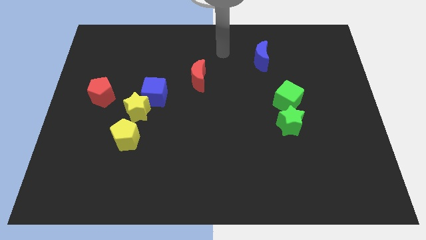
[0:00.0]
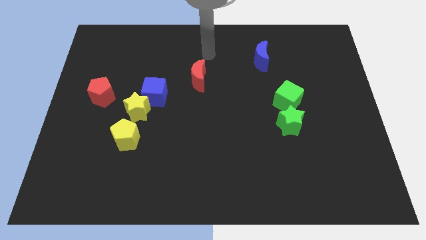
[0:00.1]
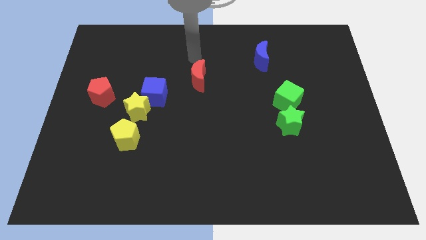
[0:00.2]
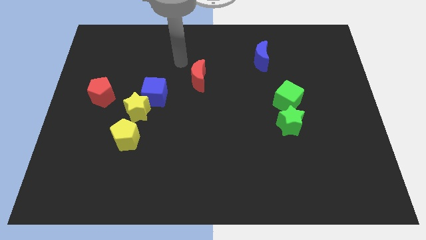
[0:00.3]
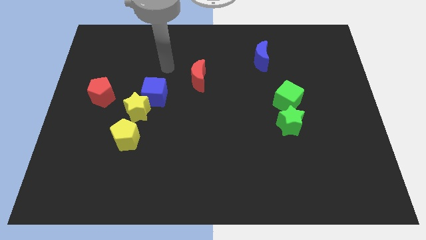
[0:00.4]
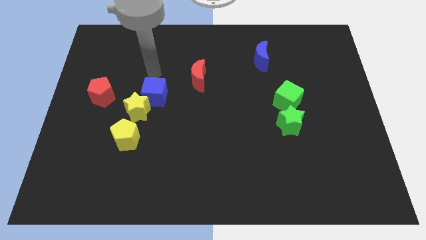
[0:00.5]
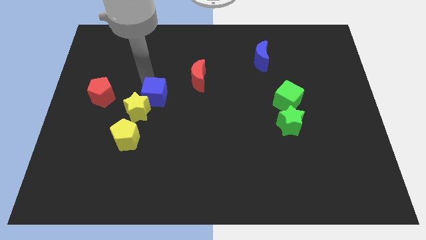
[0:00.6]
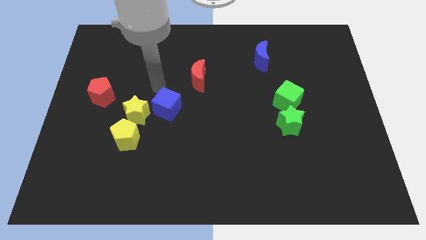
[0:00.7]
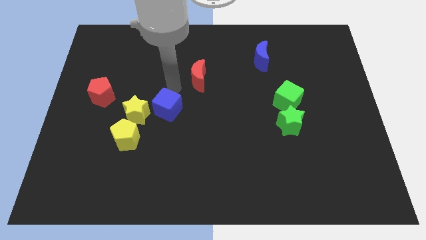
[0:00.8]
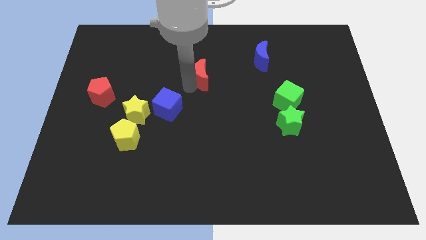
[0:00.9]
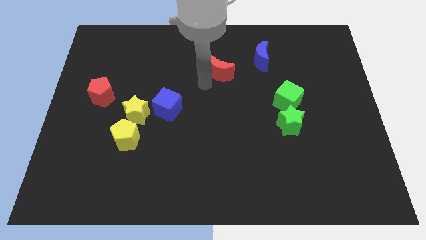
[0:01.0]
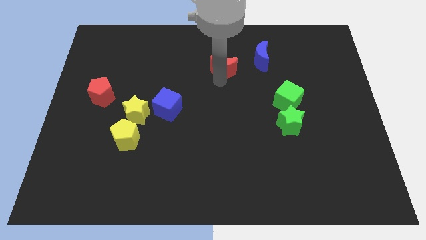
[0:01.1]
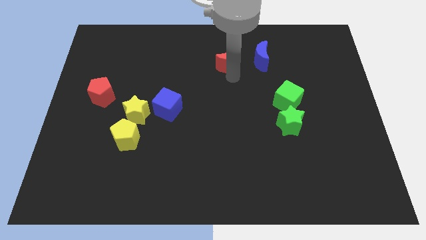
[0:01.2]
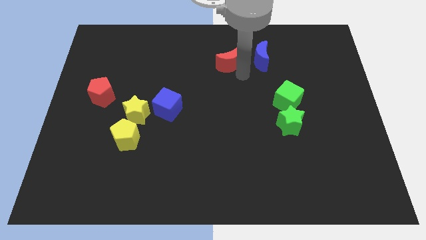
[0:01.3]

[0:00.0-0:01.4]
move the red crescent towards blue crescent

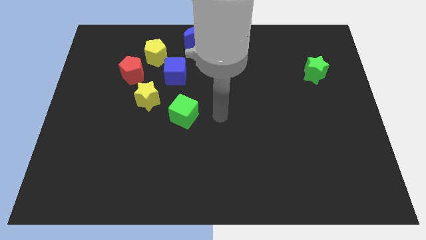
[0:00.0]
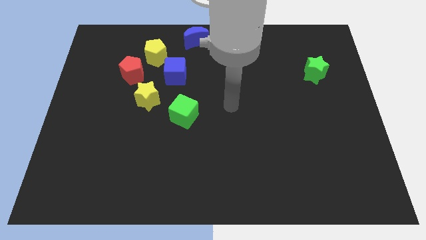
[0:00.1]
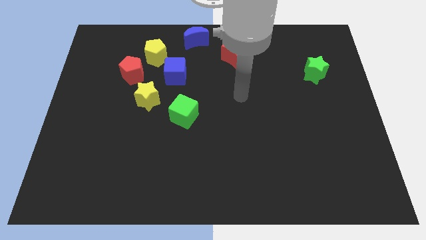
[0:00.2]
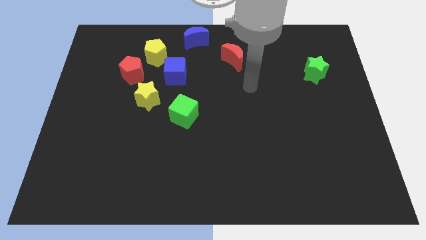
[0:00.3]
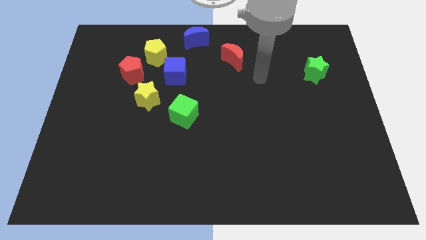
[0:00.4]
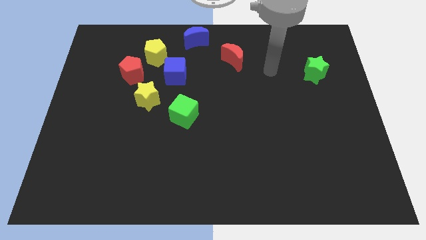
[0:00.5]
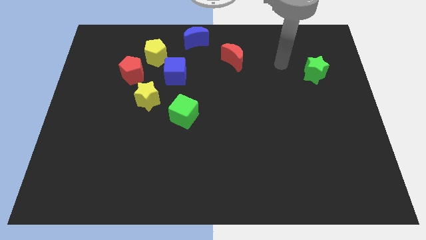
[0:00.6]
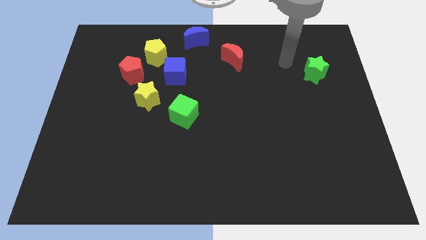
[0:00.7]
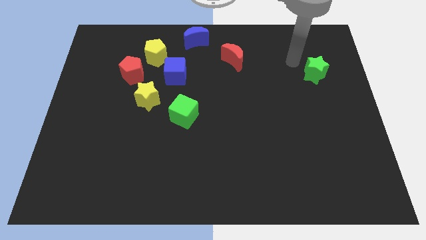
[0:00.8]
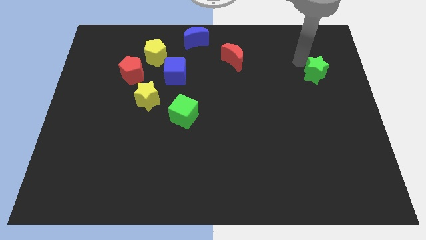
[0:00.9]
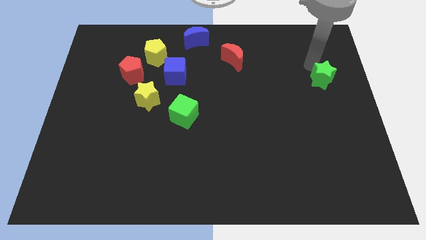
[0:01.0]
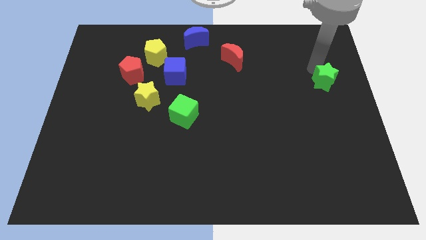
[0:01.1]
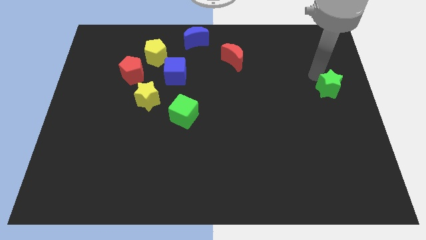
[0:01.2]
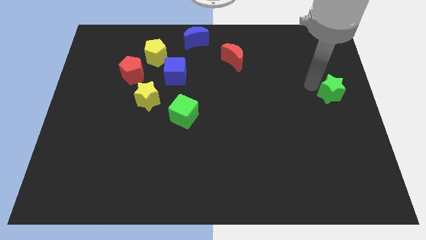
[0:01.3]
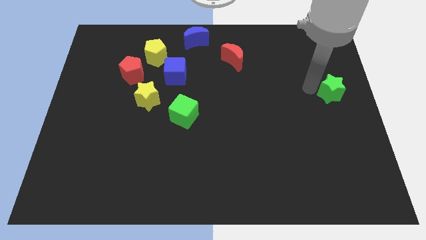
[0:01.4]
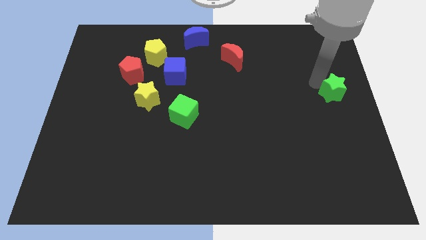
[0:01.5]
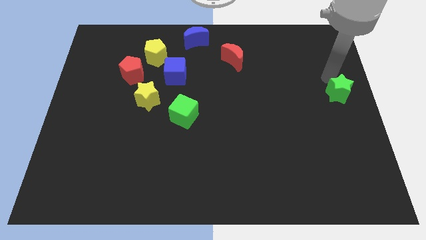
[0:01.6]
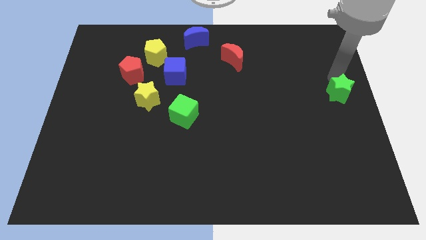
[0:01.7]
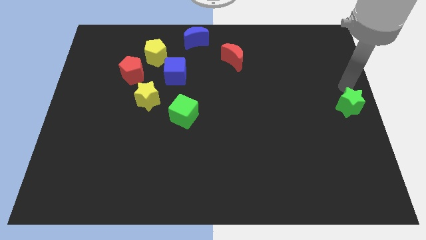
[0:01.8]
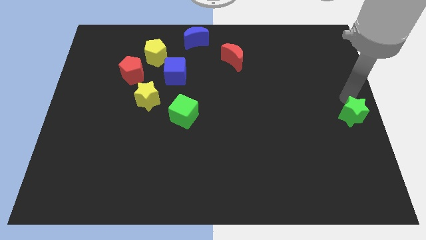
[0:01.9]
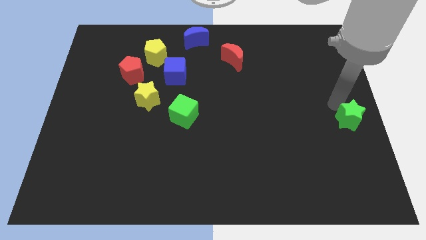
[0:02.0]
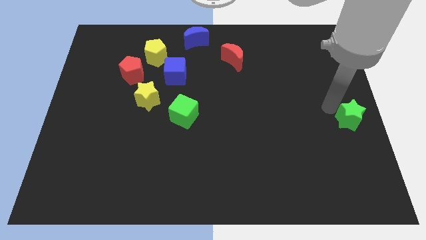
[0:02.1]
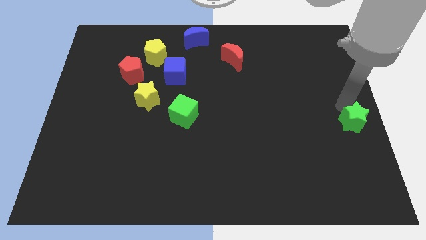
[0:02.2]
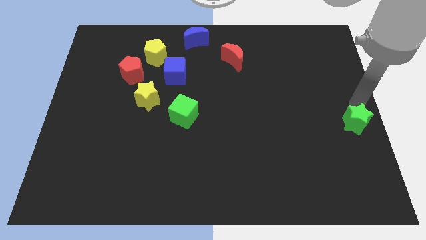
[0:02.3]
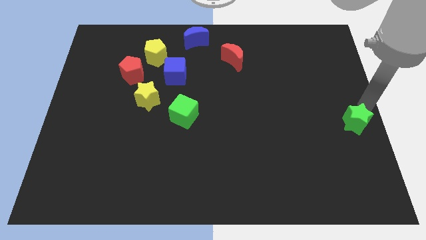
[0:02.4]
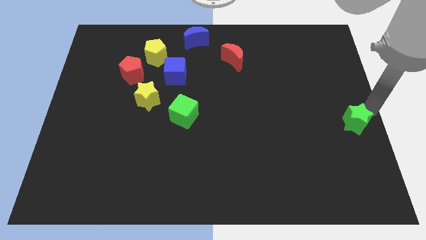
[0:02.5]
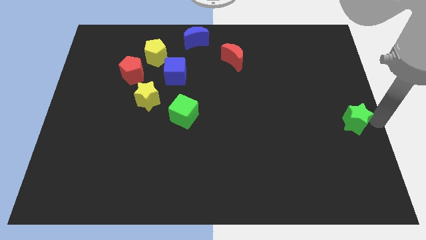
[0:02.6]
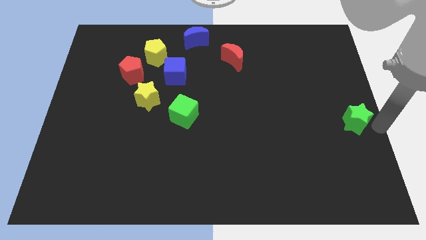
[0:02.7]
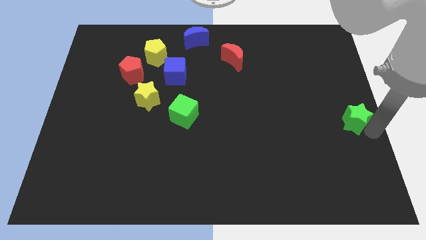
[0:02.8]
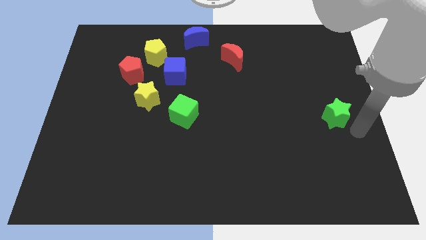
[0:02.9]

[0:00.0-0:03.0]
move the green star to the right center

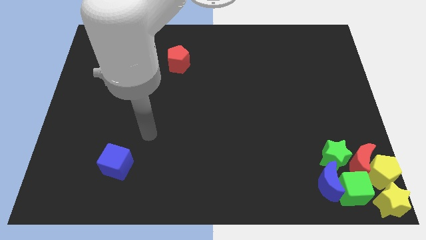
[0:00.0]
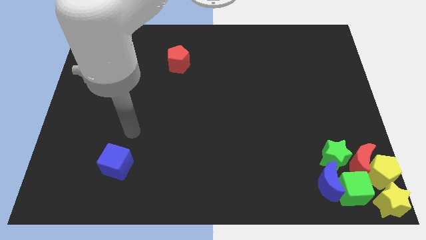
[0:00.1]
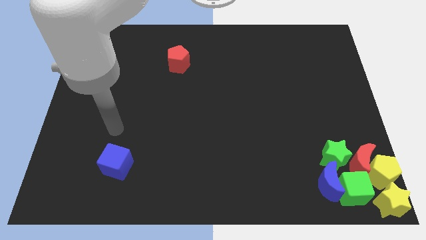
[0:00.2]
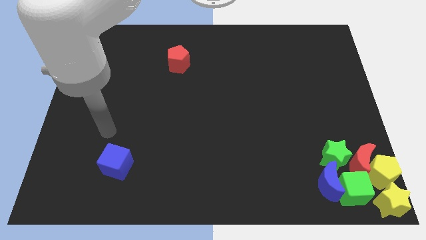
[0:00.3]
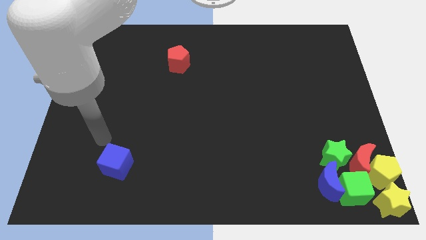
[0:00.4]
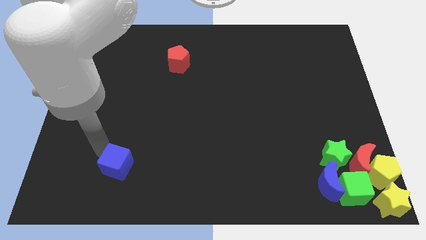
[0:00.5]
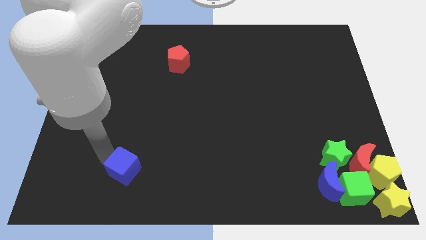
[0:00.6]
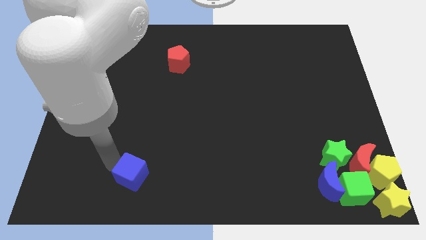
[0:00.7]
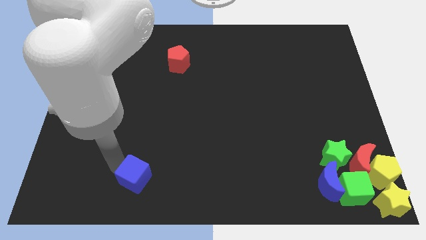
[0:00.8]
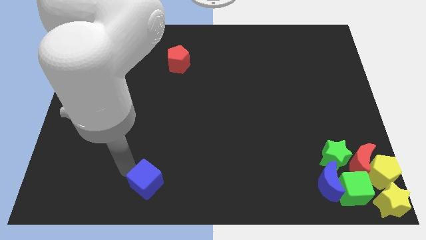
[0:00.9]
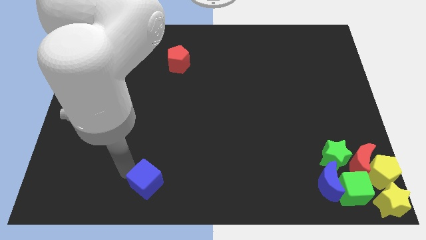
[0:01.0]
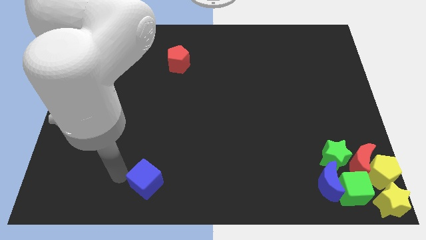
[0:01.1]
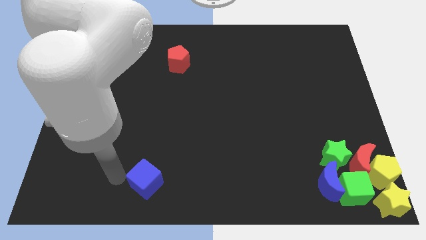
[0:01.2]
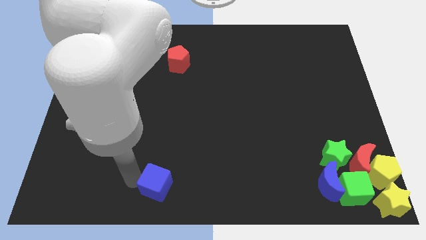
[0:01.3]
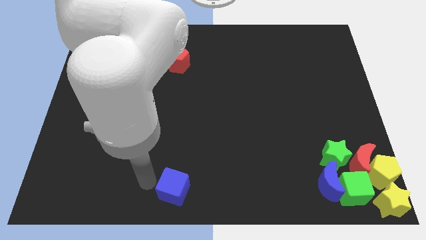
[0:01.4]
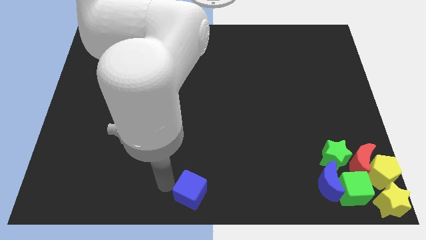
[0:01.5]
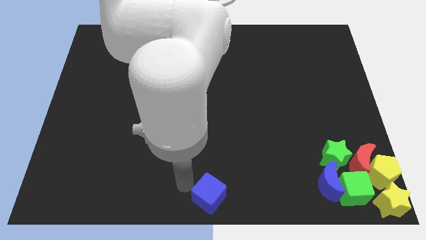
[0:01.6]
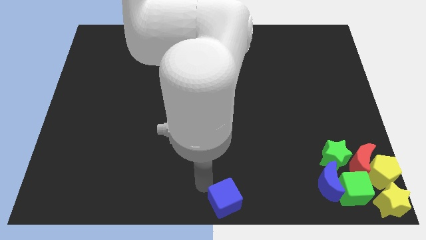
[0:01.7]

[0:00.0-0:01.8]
push the blue cube to the bottom center of the board

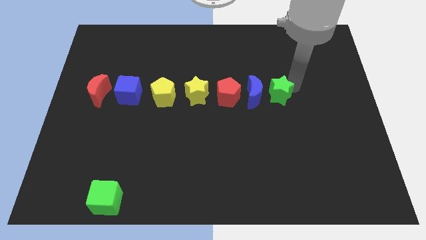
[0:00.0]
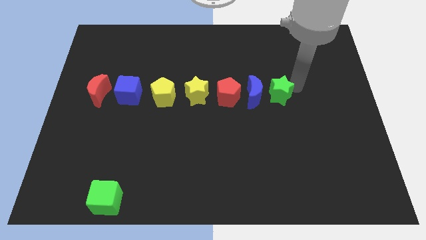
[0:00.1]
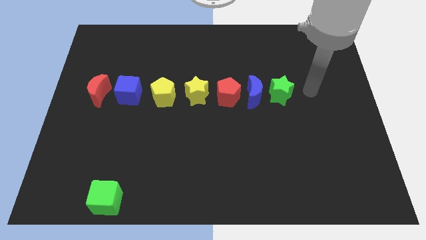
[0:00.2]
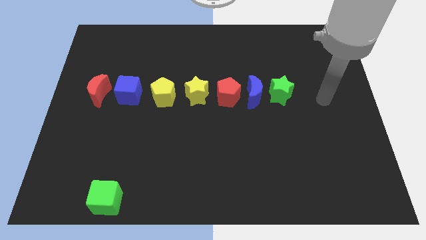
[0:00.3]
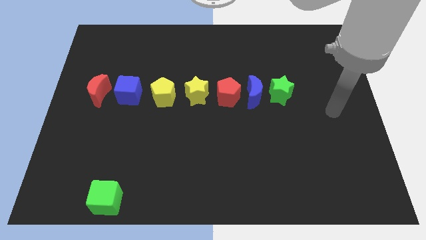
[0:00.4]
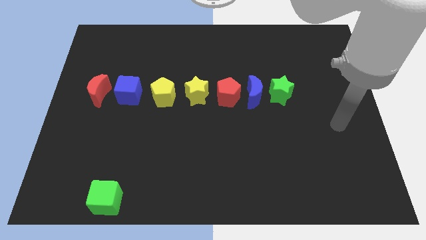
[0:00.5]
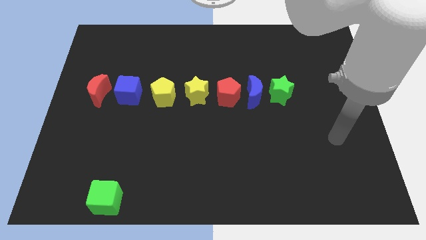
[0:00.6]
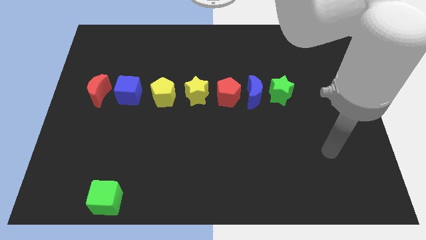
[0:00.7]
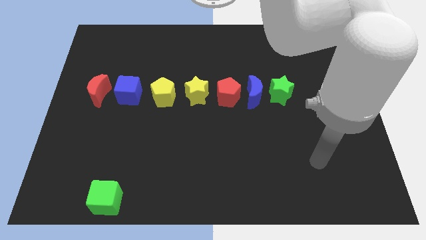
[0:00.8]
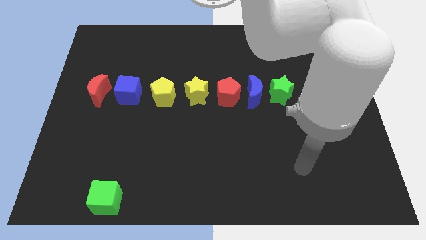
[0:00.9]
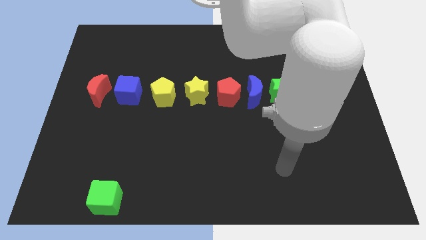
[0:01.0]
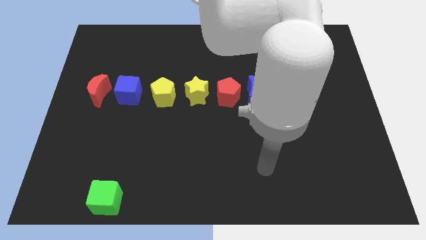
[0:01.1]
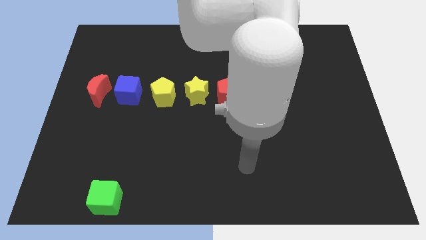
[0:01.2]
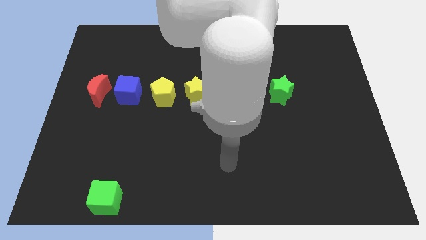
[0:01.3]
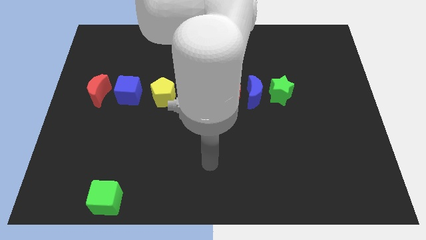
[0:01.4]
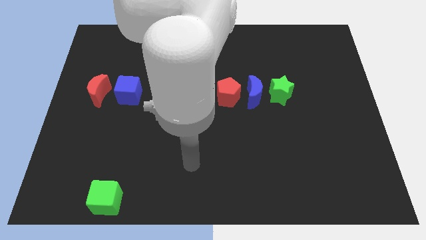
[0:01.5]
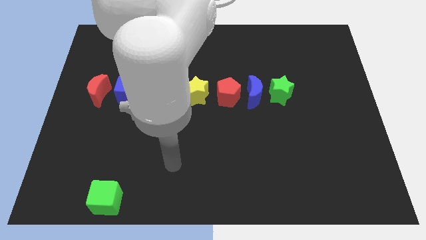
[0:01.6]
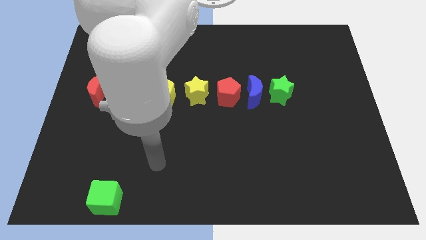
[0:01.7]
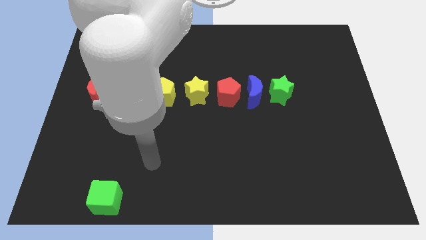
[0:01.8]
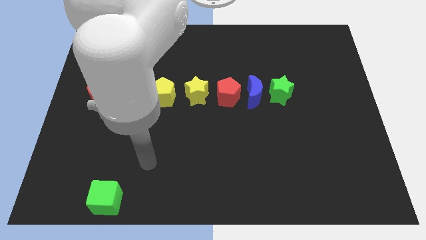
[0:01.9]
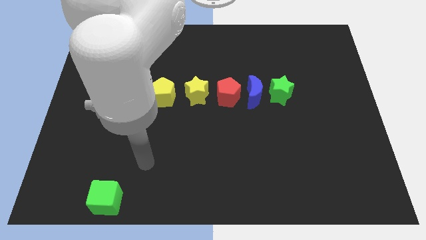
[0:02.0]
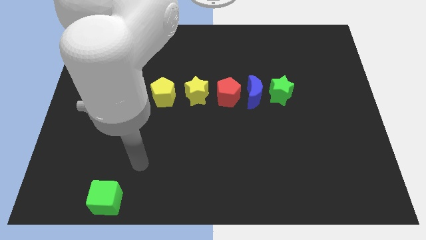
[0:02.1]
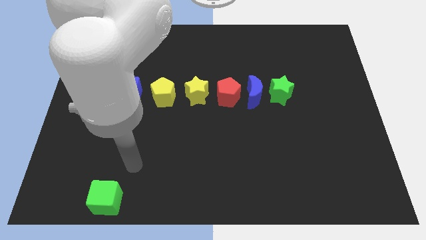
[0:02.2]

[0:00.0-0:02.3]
move your arm away from the green star

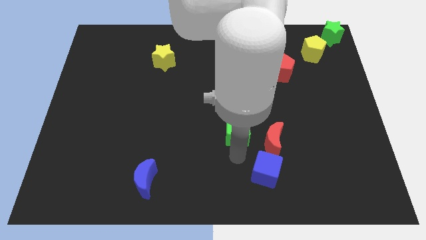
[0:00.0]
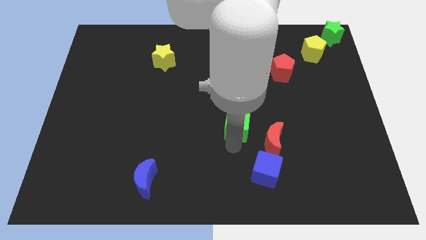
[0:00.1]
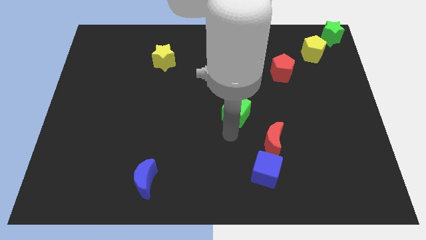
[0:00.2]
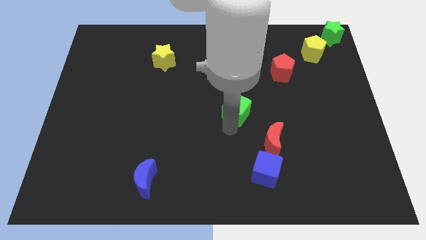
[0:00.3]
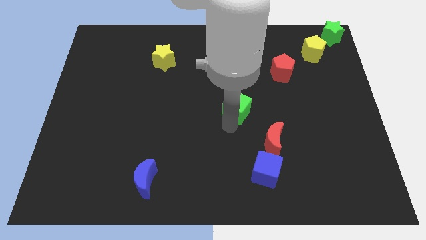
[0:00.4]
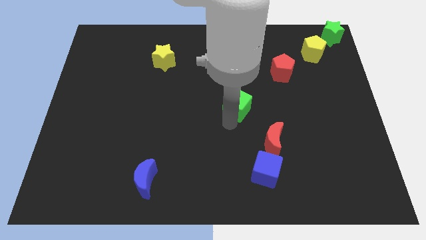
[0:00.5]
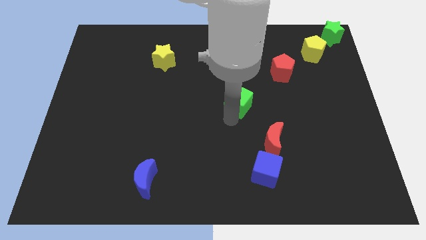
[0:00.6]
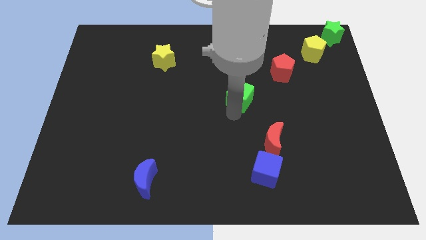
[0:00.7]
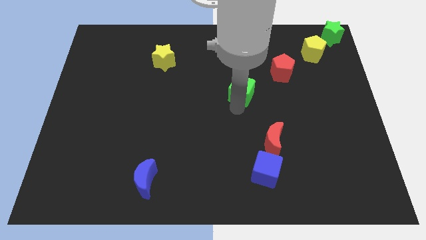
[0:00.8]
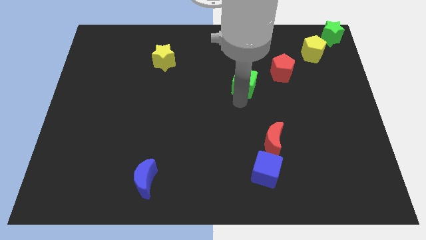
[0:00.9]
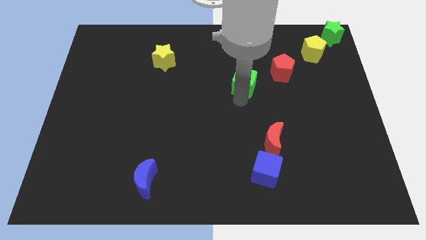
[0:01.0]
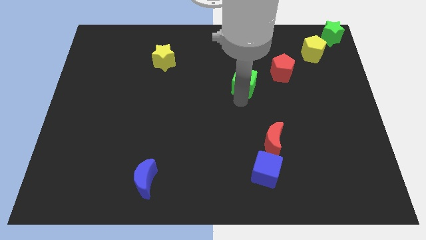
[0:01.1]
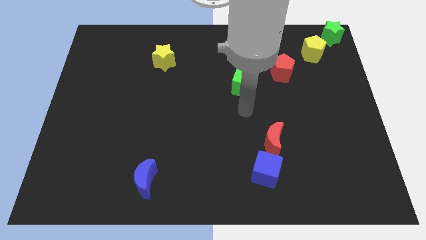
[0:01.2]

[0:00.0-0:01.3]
push green cube diagonally towards red pentagon
